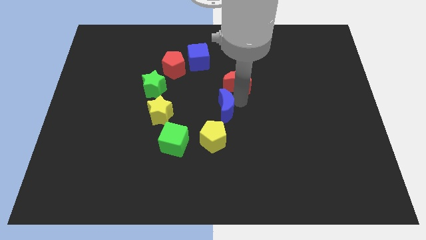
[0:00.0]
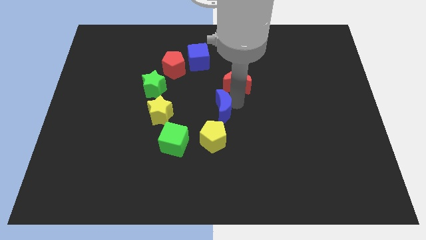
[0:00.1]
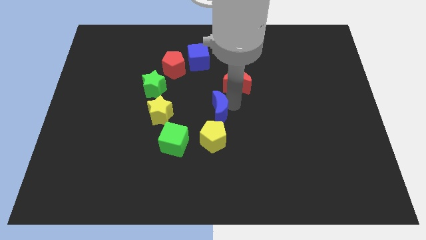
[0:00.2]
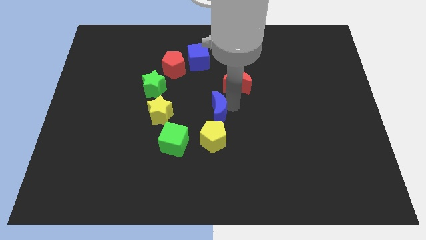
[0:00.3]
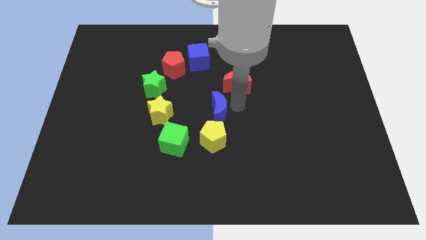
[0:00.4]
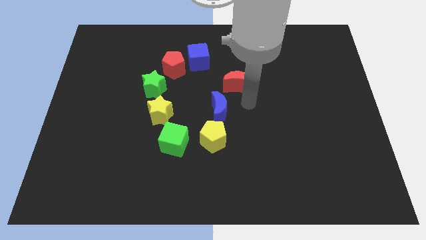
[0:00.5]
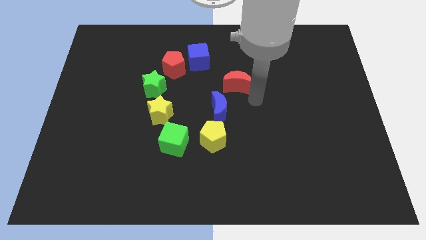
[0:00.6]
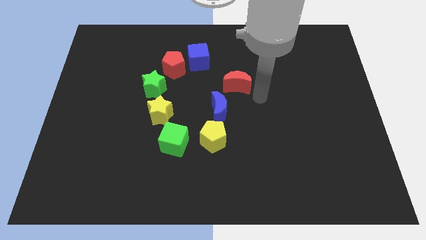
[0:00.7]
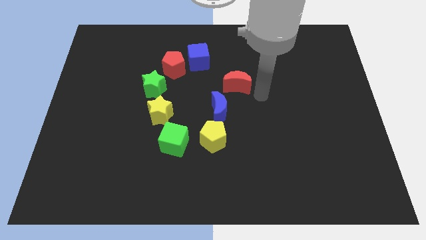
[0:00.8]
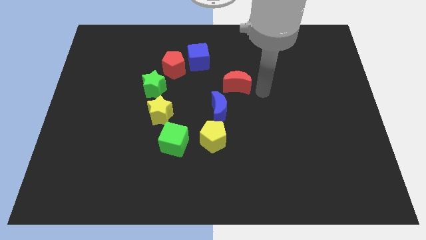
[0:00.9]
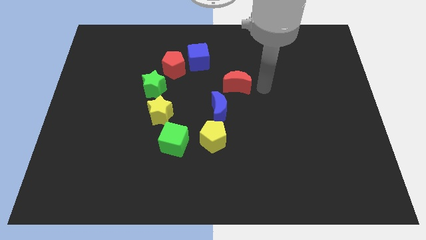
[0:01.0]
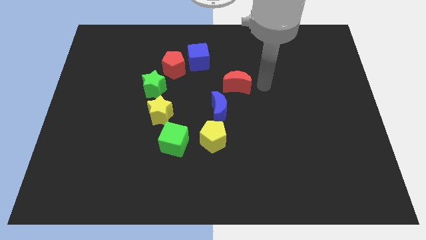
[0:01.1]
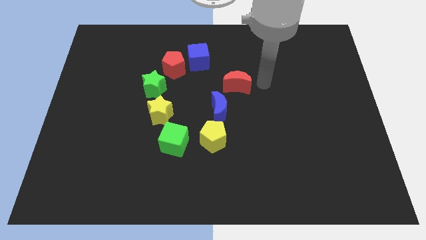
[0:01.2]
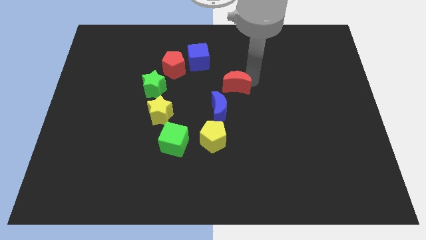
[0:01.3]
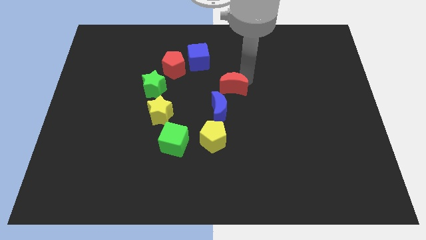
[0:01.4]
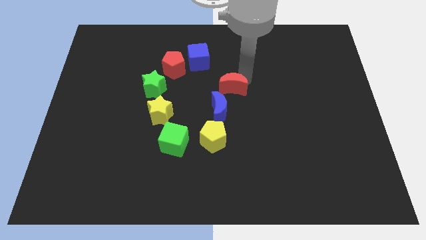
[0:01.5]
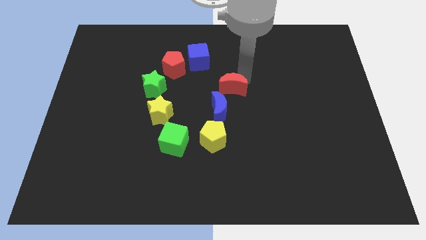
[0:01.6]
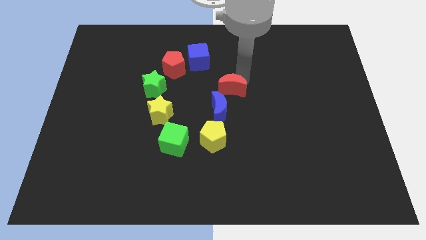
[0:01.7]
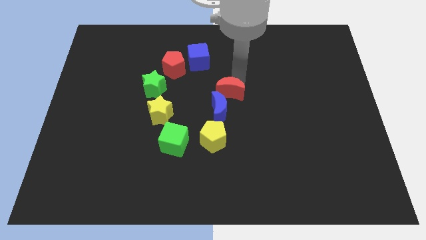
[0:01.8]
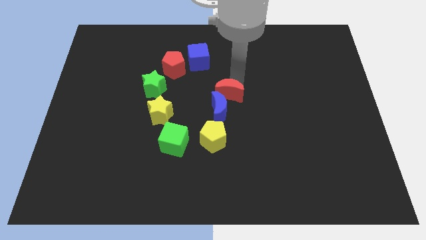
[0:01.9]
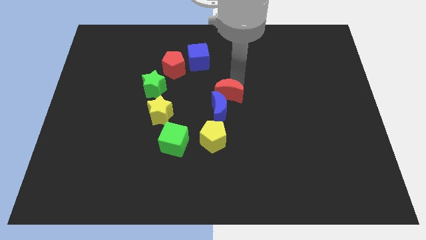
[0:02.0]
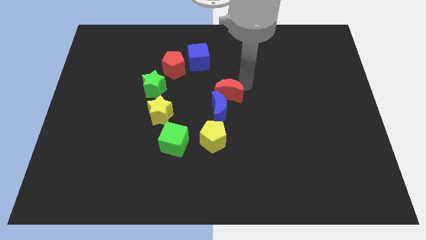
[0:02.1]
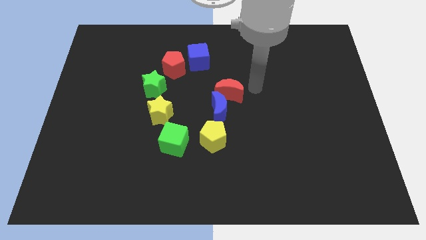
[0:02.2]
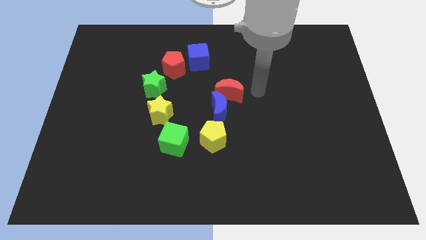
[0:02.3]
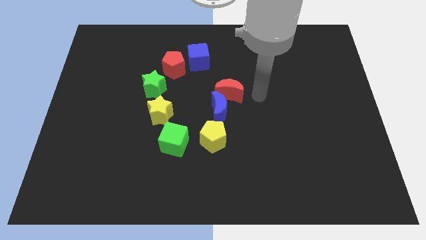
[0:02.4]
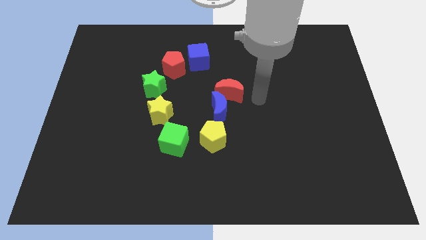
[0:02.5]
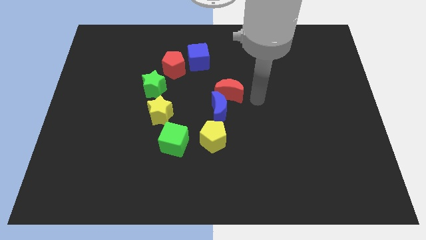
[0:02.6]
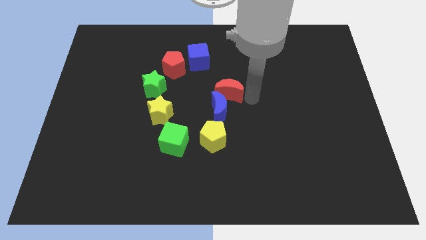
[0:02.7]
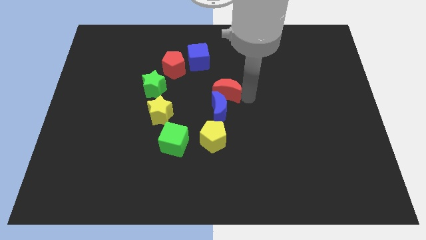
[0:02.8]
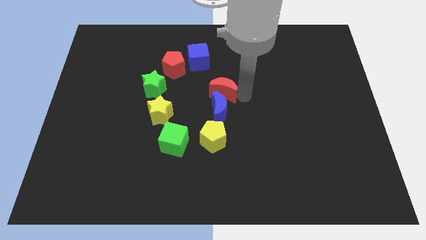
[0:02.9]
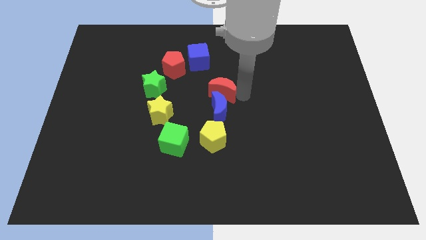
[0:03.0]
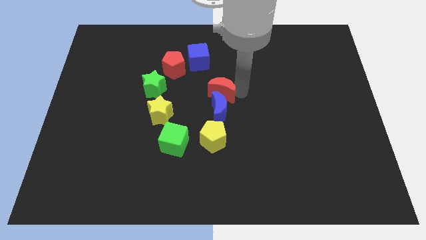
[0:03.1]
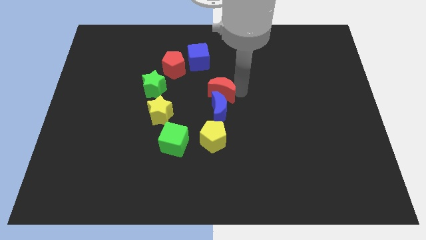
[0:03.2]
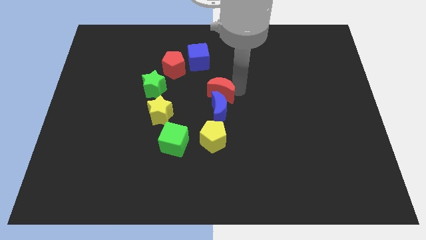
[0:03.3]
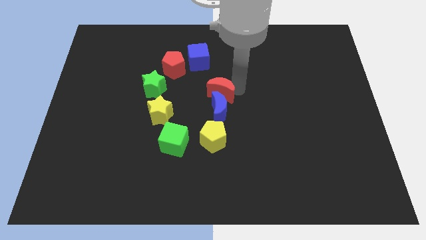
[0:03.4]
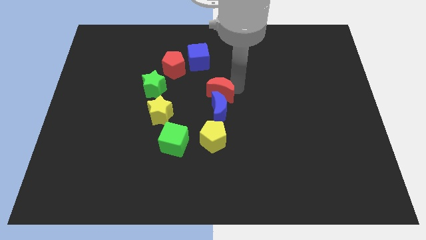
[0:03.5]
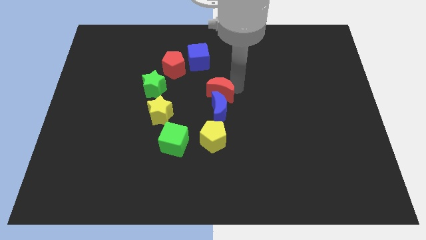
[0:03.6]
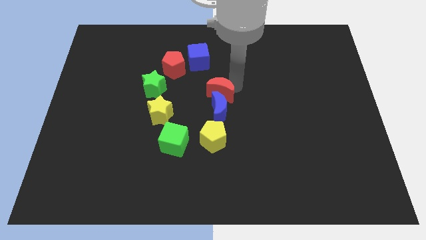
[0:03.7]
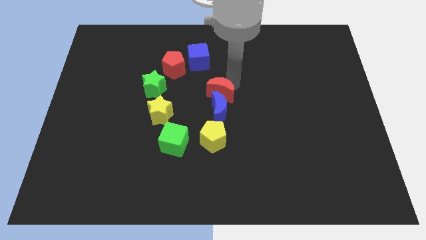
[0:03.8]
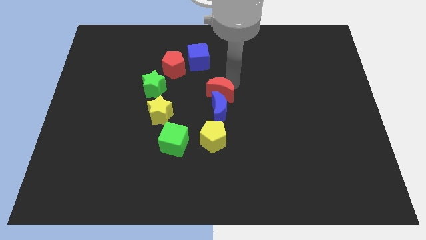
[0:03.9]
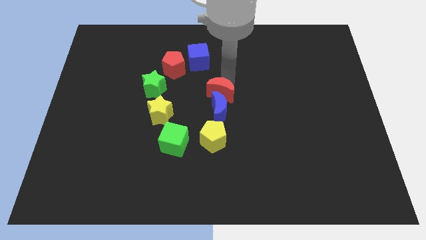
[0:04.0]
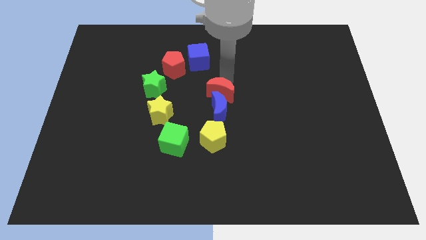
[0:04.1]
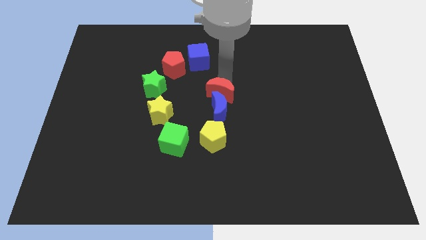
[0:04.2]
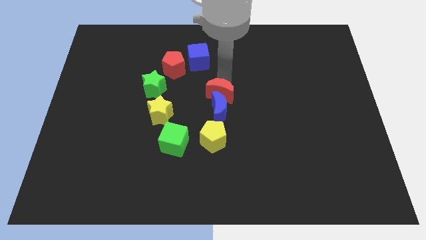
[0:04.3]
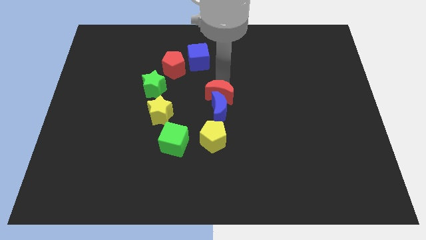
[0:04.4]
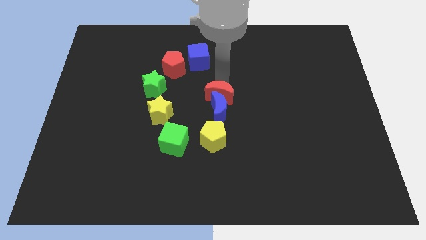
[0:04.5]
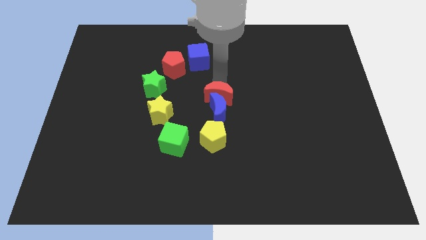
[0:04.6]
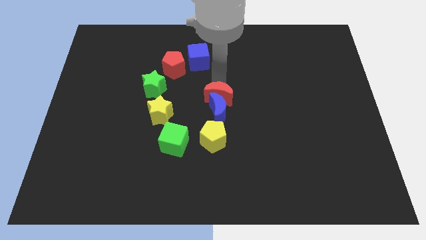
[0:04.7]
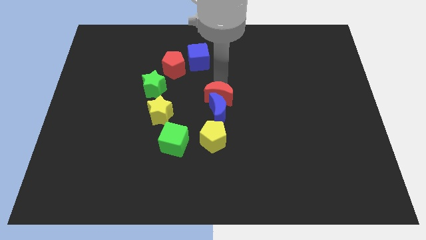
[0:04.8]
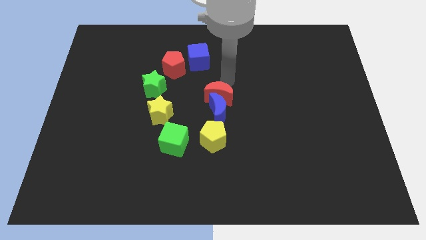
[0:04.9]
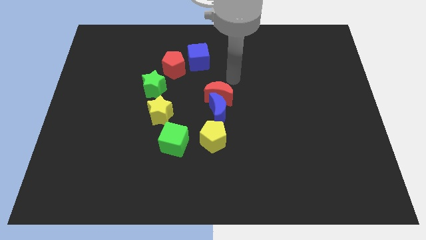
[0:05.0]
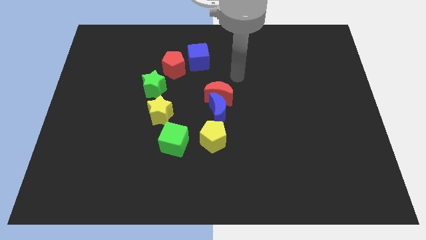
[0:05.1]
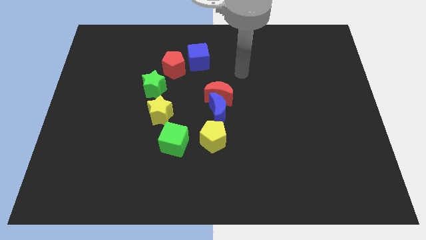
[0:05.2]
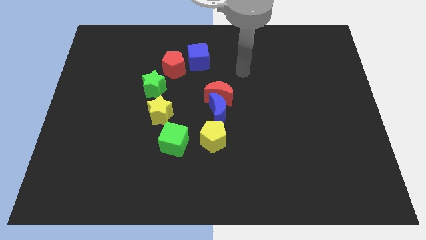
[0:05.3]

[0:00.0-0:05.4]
move the red moon above the blue crescent

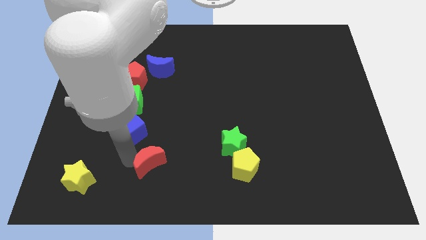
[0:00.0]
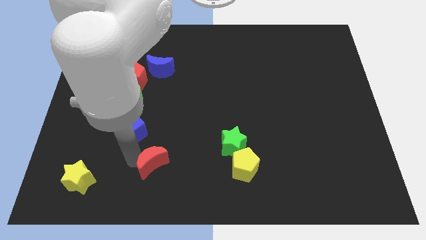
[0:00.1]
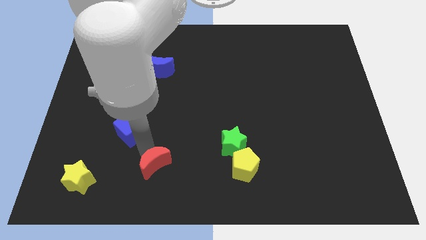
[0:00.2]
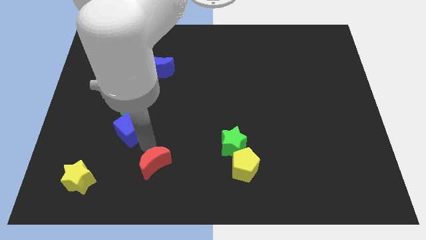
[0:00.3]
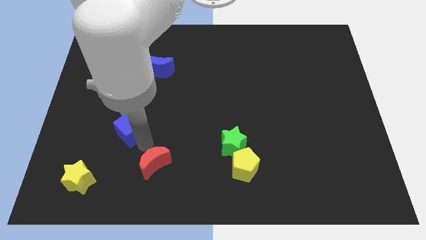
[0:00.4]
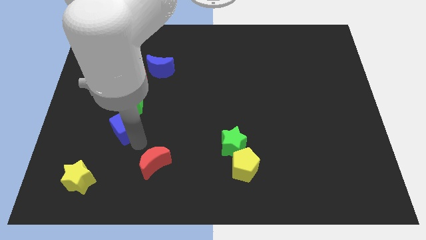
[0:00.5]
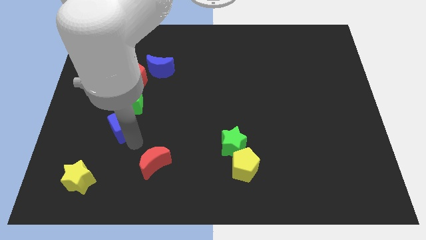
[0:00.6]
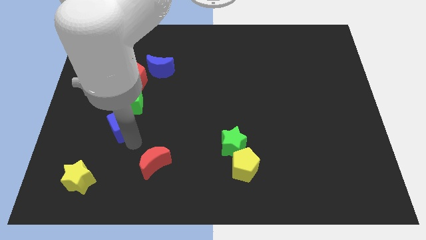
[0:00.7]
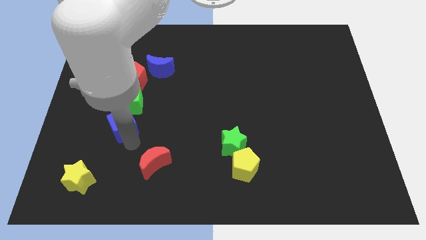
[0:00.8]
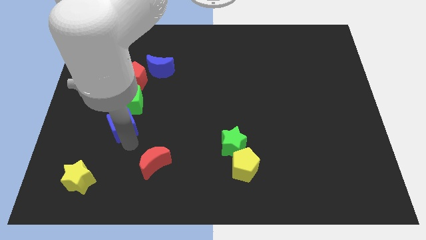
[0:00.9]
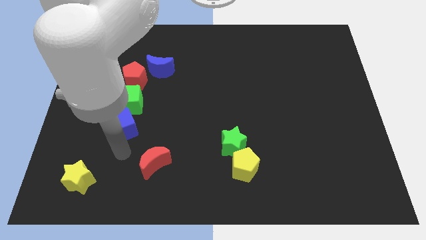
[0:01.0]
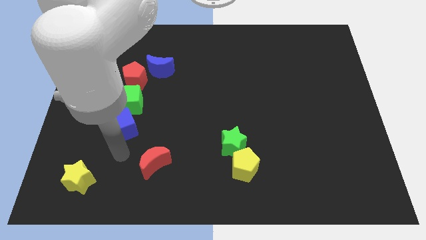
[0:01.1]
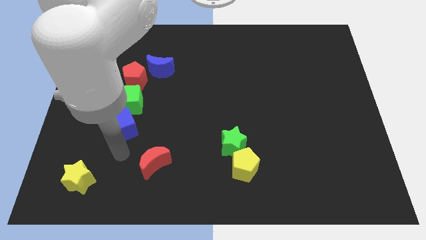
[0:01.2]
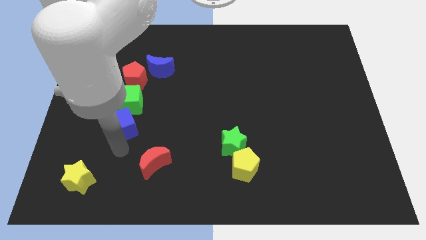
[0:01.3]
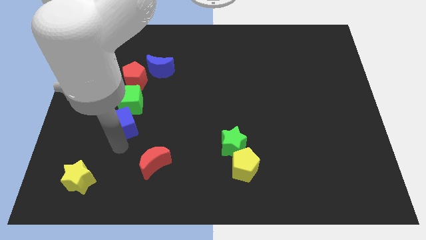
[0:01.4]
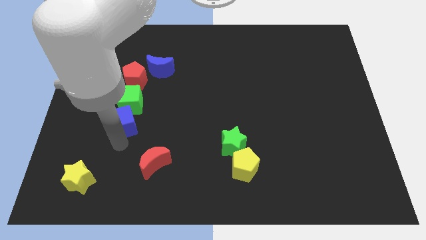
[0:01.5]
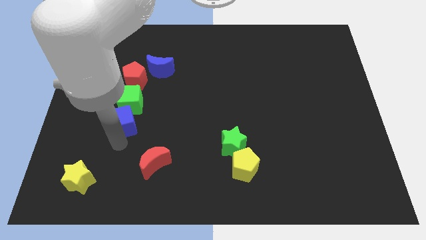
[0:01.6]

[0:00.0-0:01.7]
push blue cube close to green cube

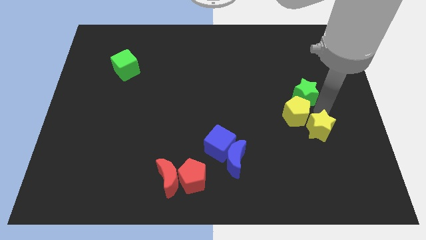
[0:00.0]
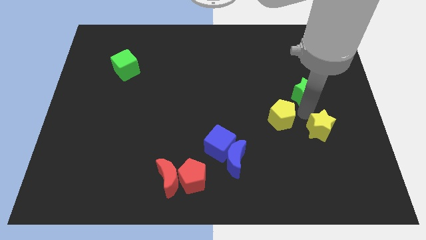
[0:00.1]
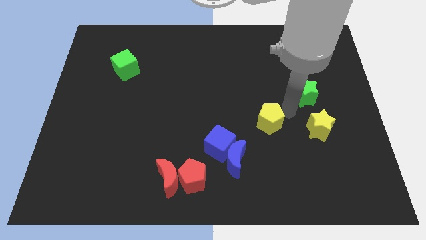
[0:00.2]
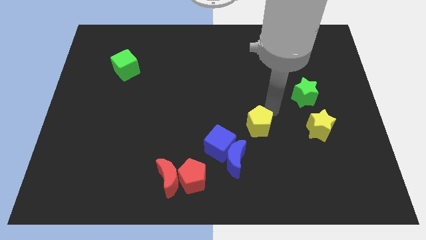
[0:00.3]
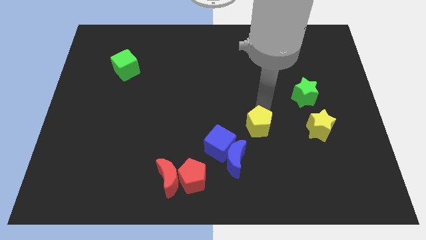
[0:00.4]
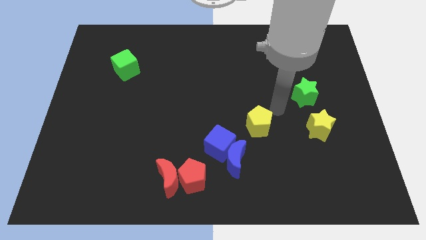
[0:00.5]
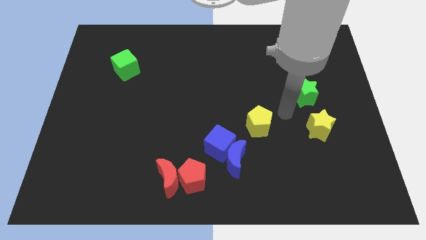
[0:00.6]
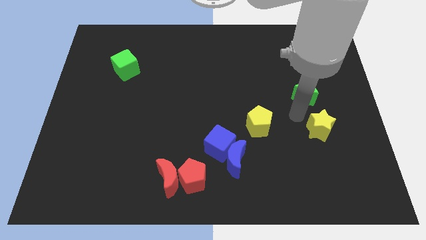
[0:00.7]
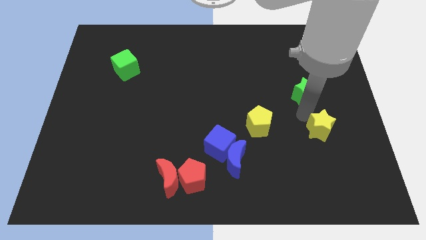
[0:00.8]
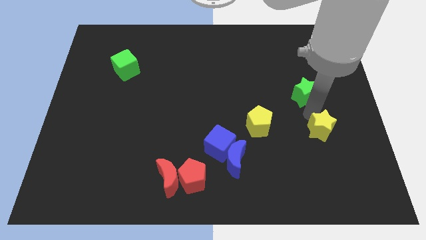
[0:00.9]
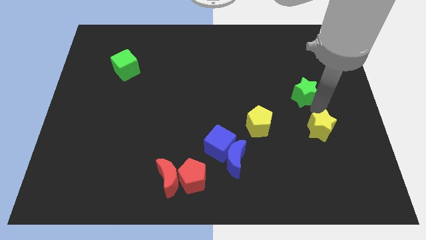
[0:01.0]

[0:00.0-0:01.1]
move the yellow pentagon away from the yellow star

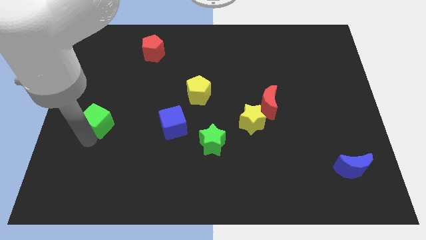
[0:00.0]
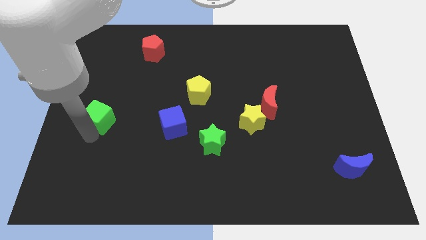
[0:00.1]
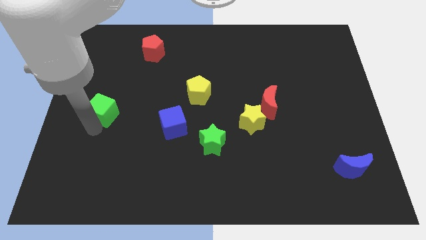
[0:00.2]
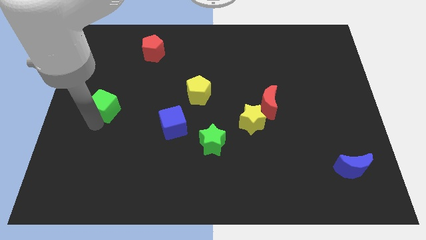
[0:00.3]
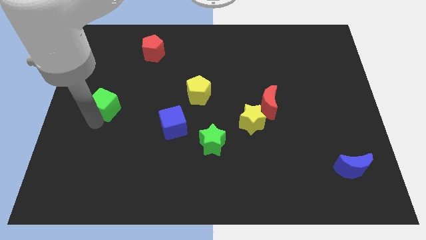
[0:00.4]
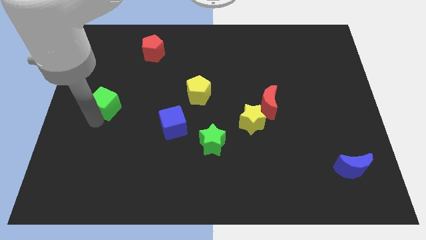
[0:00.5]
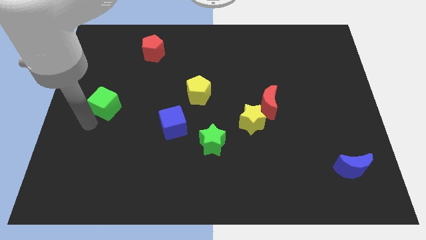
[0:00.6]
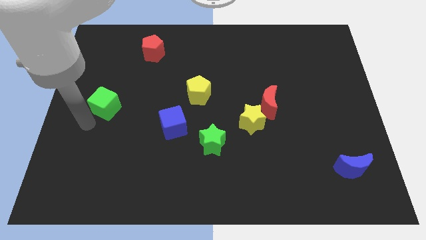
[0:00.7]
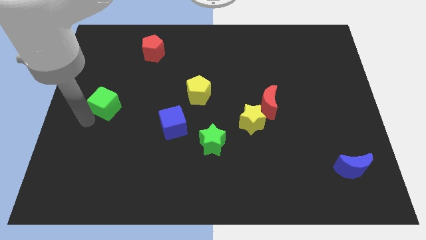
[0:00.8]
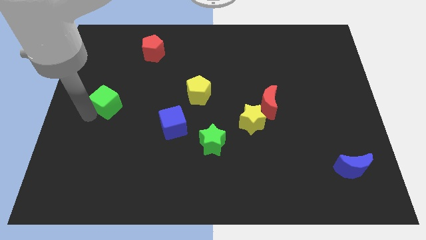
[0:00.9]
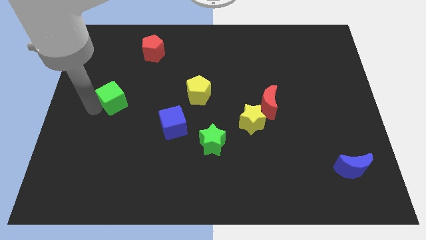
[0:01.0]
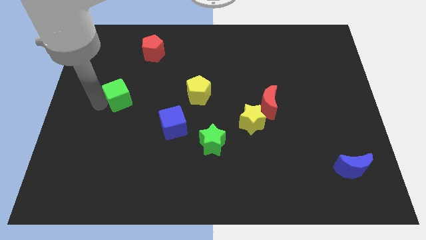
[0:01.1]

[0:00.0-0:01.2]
place the green cube horizontally to the left side of the yellow pentagon
